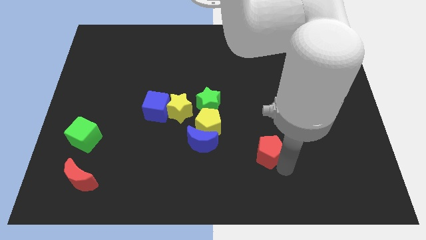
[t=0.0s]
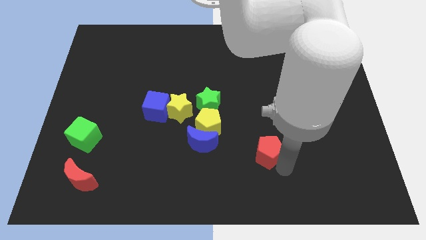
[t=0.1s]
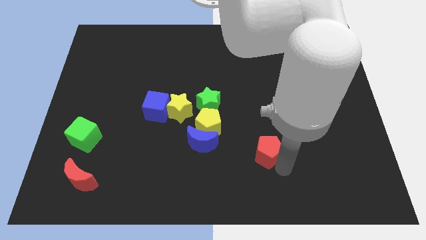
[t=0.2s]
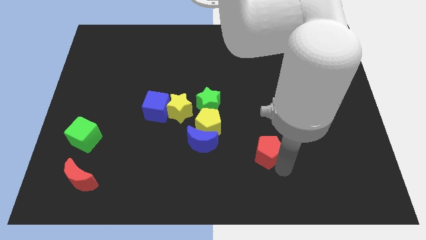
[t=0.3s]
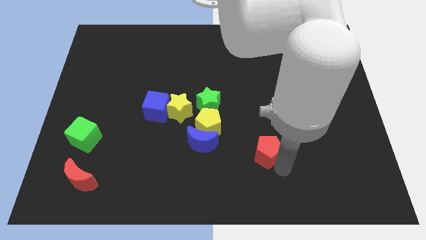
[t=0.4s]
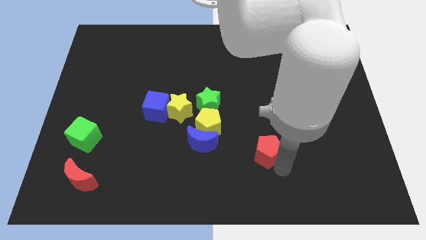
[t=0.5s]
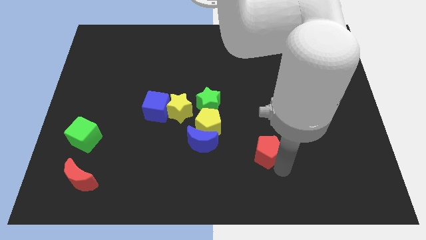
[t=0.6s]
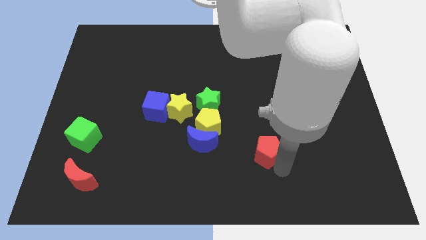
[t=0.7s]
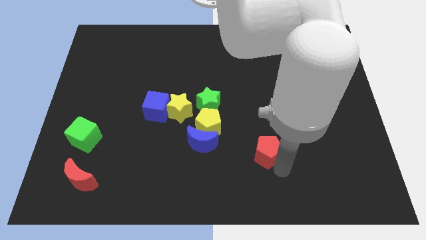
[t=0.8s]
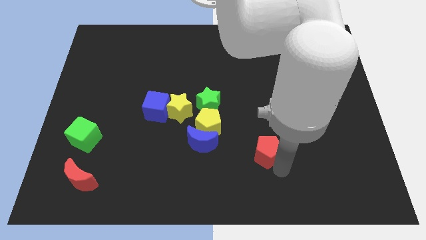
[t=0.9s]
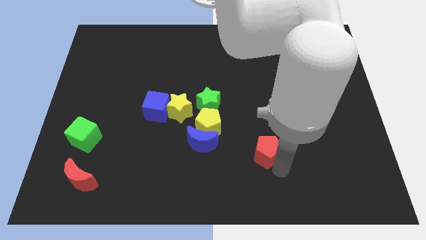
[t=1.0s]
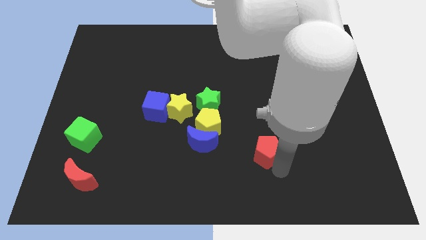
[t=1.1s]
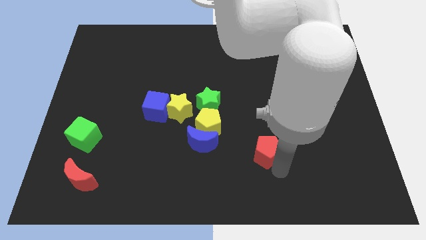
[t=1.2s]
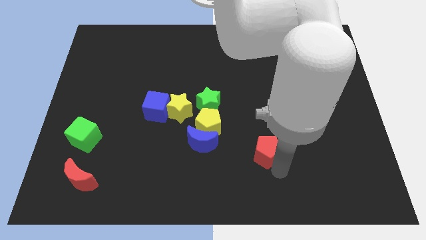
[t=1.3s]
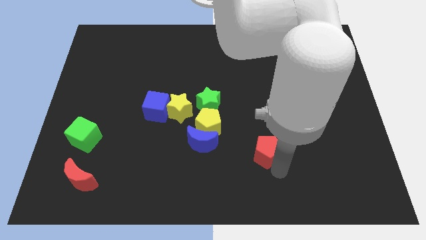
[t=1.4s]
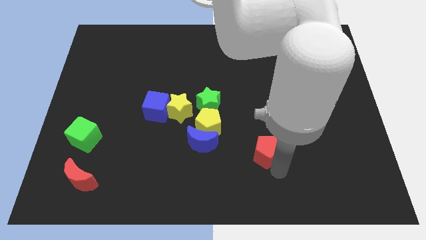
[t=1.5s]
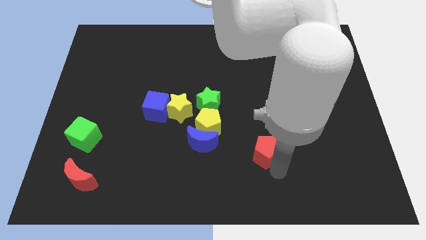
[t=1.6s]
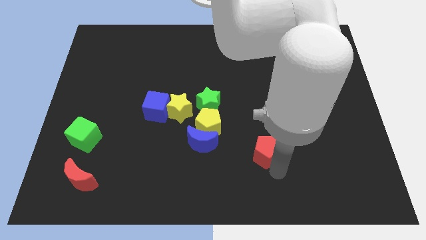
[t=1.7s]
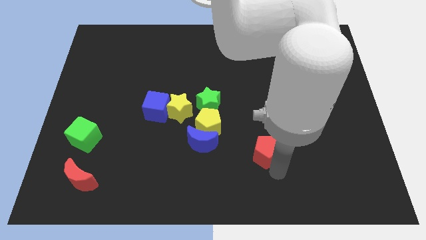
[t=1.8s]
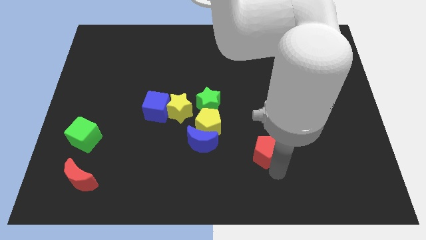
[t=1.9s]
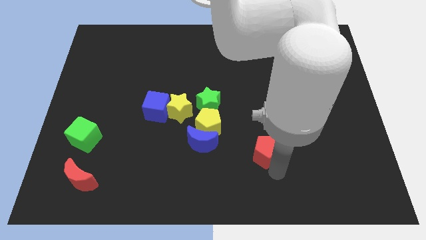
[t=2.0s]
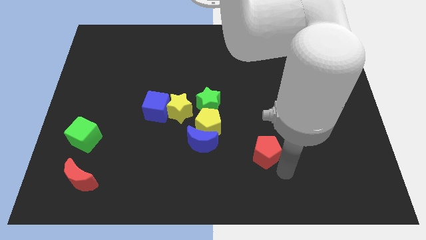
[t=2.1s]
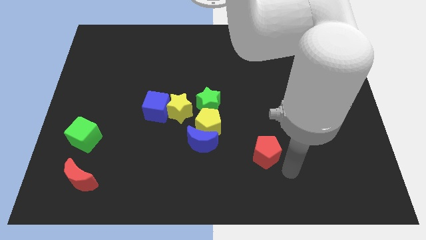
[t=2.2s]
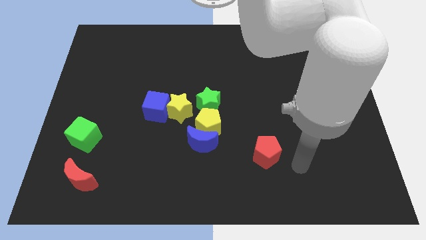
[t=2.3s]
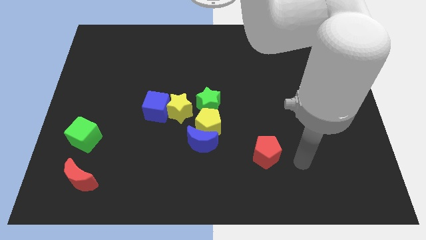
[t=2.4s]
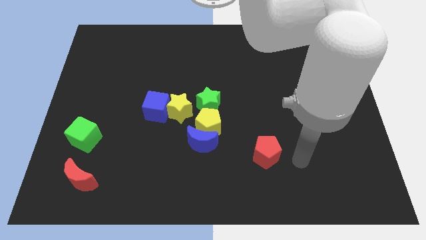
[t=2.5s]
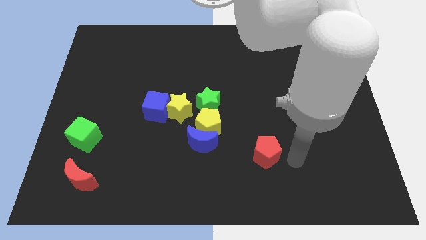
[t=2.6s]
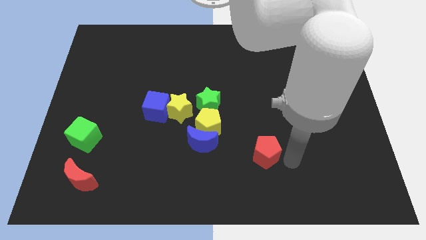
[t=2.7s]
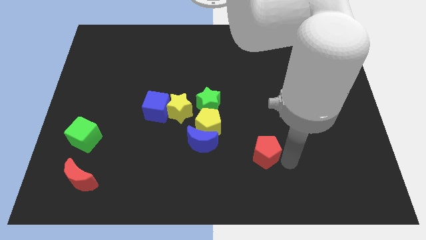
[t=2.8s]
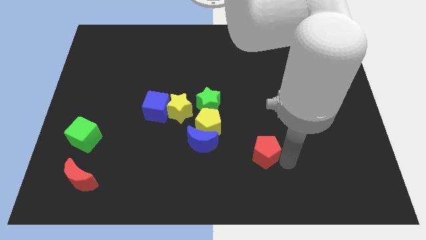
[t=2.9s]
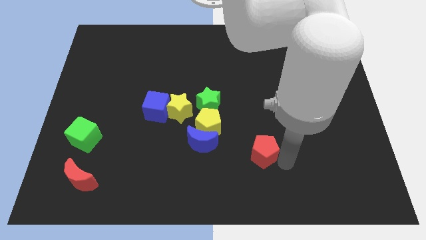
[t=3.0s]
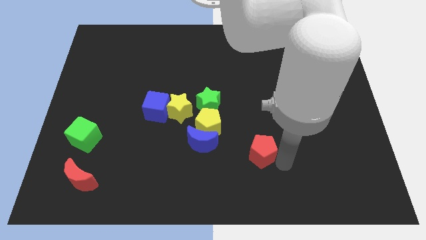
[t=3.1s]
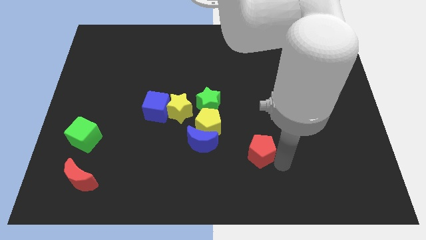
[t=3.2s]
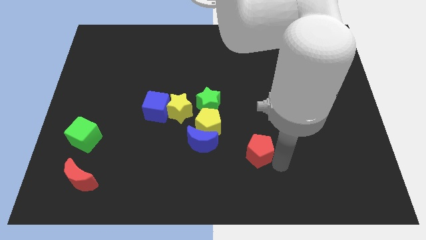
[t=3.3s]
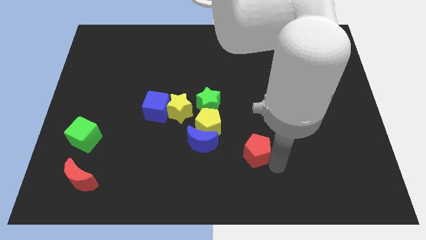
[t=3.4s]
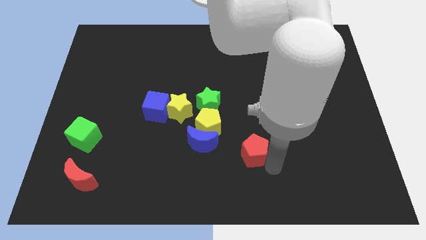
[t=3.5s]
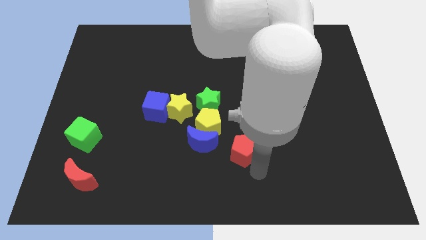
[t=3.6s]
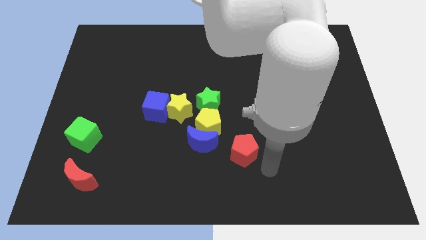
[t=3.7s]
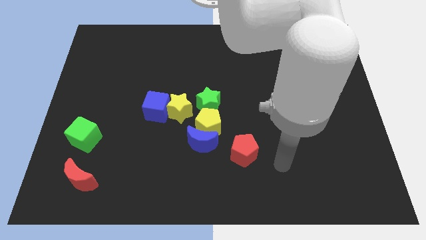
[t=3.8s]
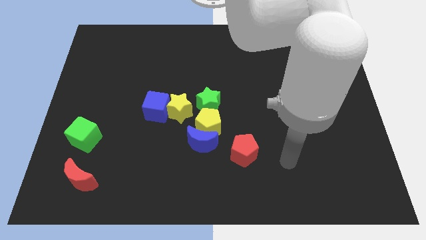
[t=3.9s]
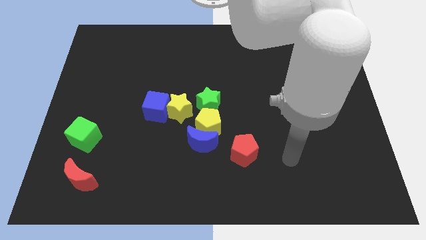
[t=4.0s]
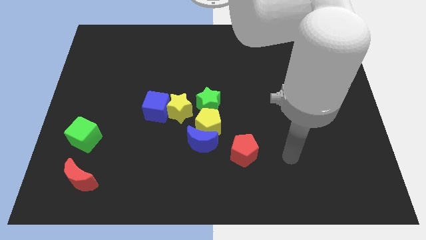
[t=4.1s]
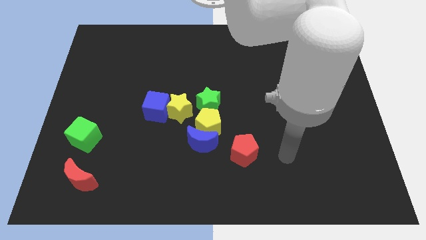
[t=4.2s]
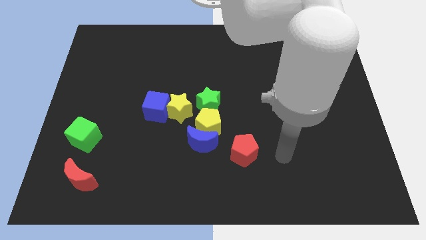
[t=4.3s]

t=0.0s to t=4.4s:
move red pentagon to the right of blue crescent

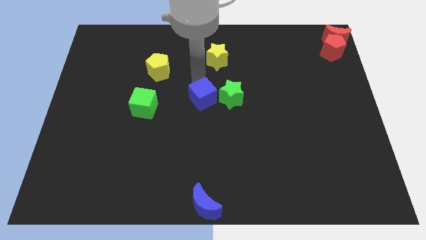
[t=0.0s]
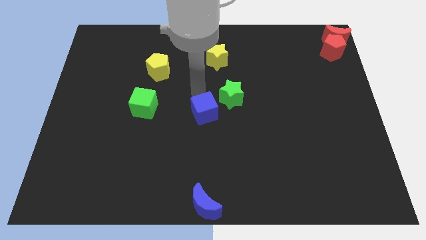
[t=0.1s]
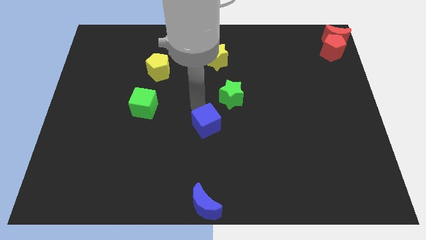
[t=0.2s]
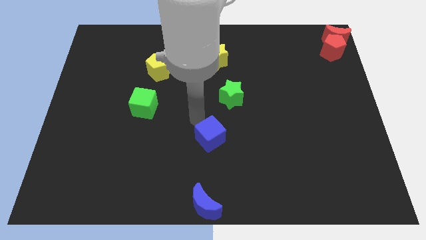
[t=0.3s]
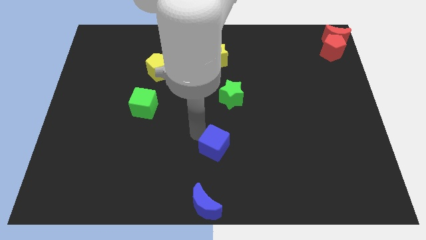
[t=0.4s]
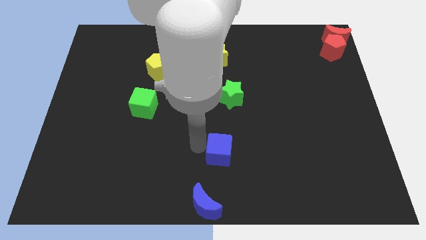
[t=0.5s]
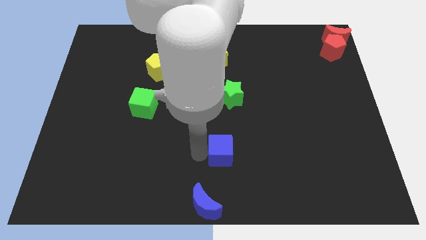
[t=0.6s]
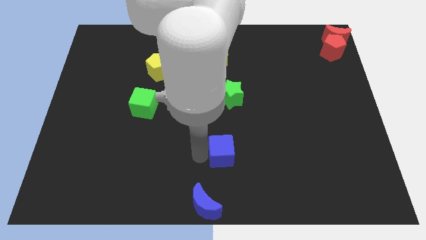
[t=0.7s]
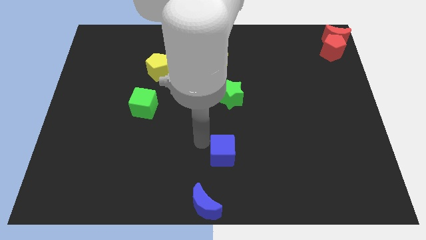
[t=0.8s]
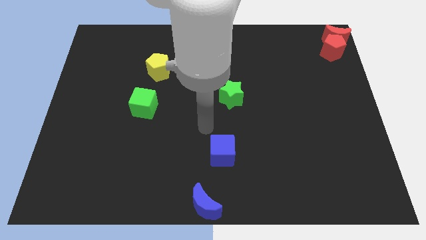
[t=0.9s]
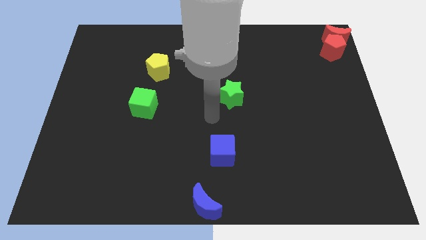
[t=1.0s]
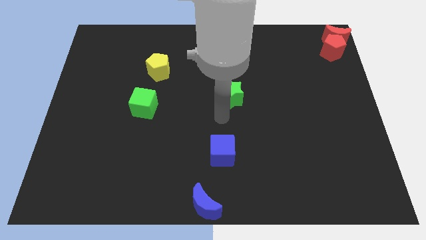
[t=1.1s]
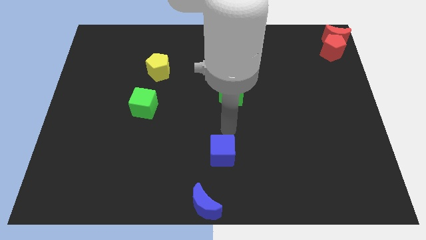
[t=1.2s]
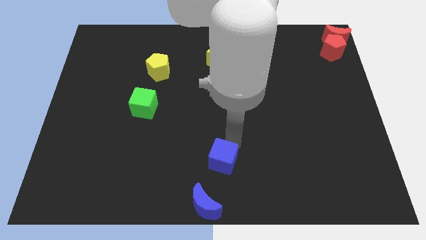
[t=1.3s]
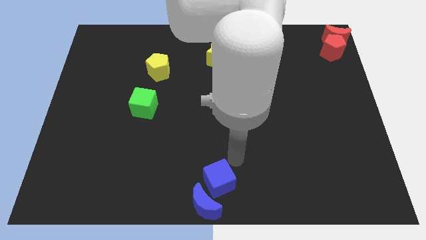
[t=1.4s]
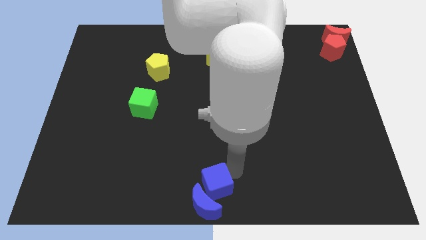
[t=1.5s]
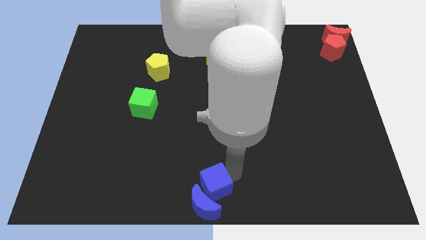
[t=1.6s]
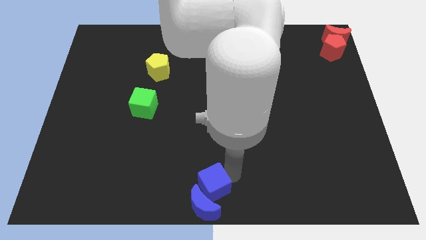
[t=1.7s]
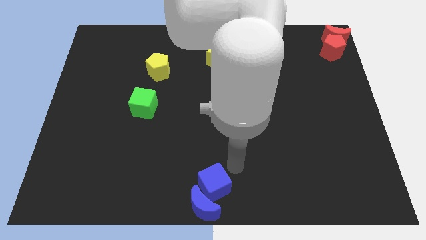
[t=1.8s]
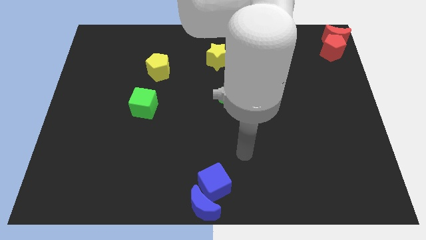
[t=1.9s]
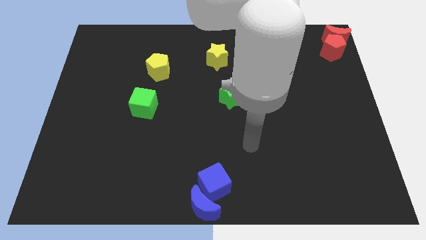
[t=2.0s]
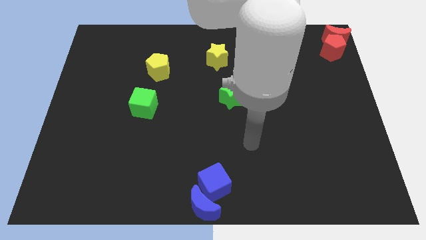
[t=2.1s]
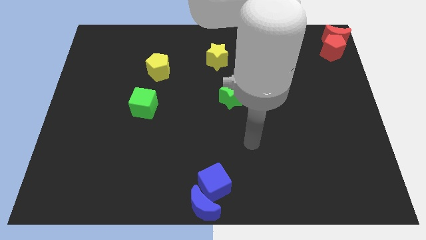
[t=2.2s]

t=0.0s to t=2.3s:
move the blue cube to the top of the blue crescent

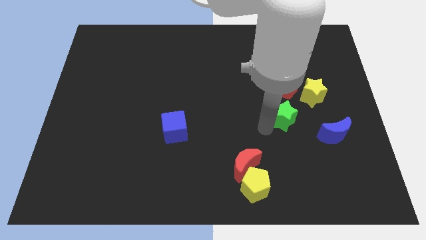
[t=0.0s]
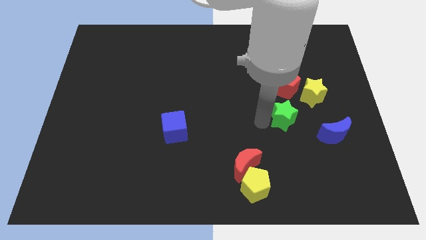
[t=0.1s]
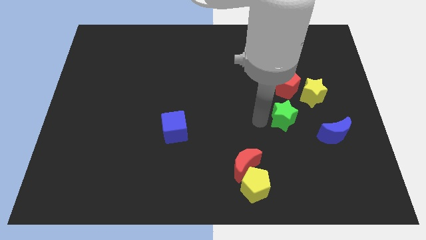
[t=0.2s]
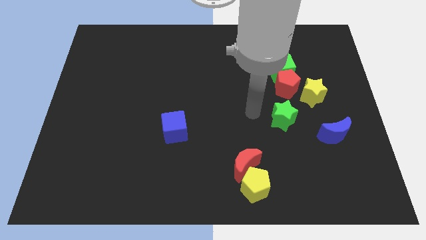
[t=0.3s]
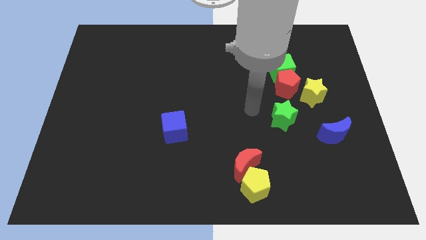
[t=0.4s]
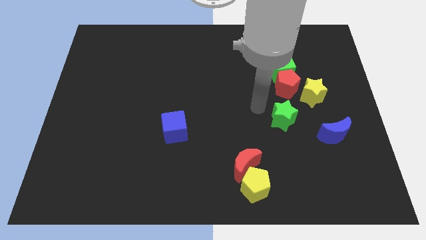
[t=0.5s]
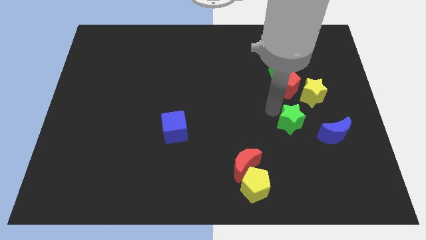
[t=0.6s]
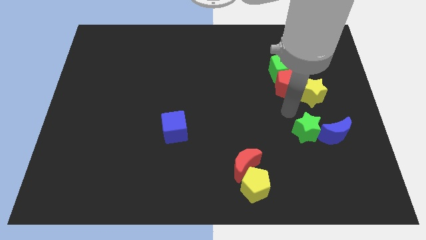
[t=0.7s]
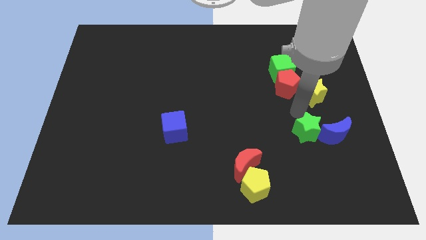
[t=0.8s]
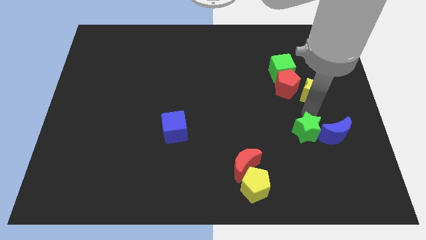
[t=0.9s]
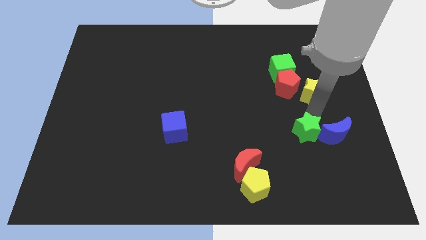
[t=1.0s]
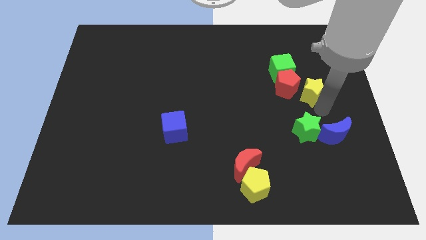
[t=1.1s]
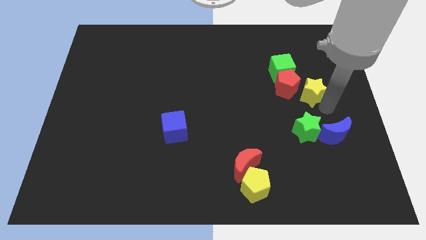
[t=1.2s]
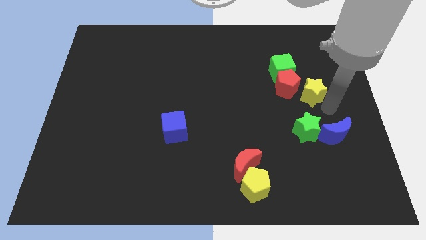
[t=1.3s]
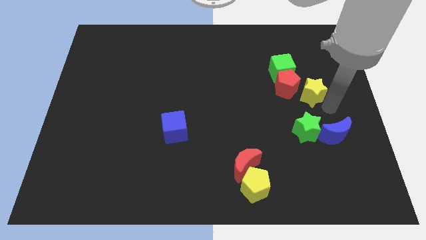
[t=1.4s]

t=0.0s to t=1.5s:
push the green star towards the blue crescent

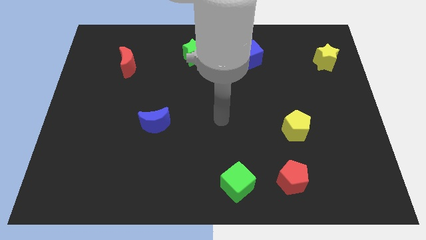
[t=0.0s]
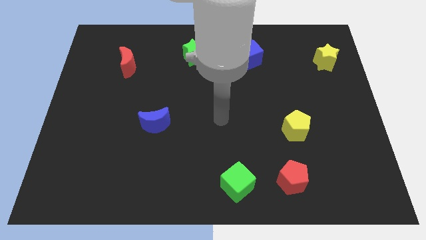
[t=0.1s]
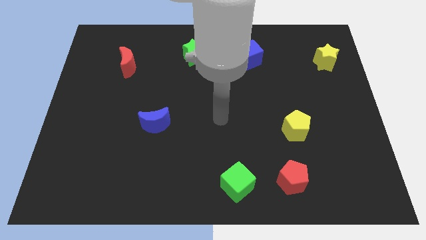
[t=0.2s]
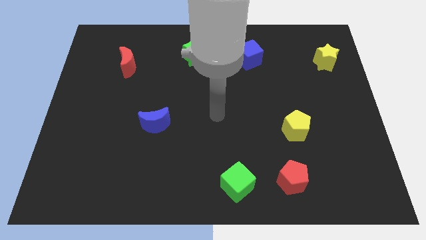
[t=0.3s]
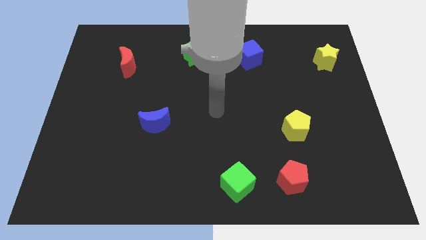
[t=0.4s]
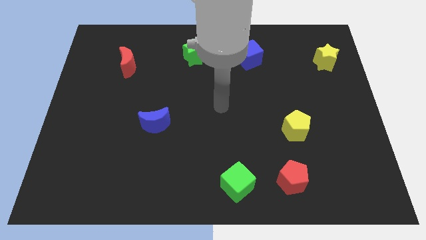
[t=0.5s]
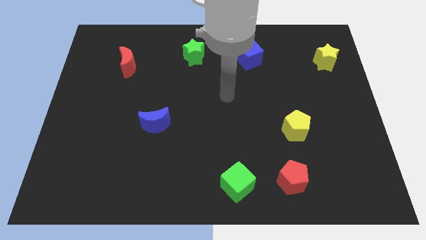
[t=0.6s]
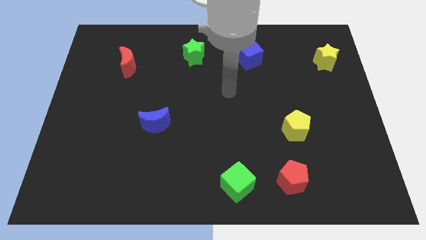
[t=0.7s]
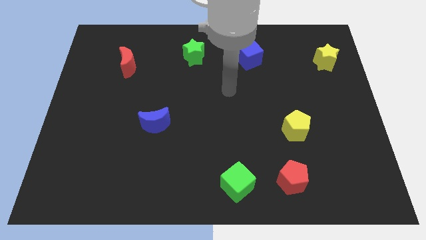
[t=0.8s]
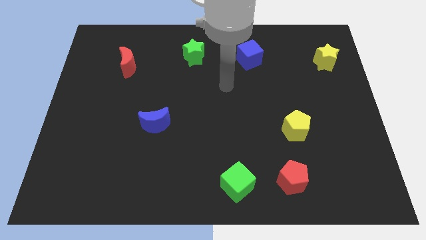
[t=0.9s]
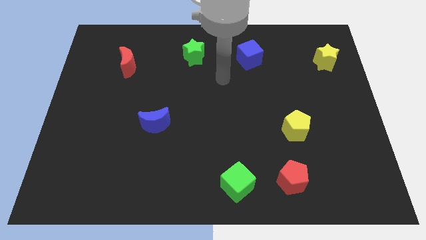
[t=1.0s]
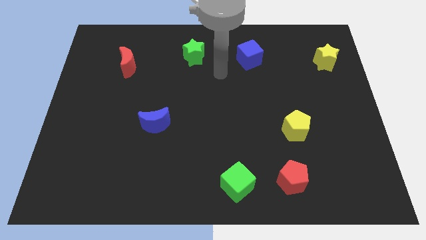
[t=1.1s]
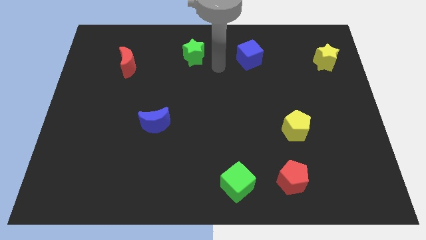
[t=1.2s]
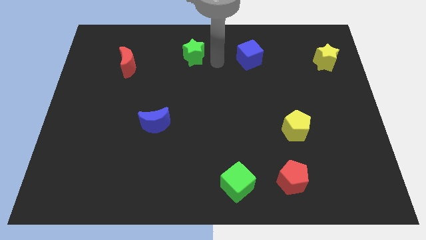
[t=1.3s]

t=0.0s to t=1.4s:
point your arm at the right side of the green star
